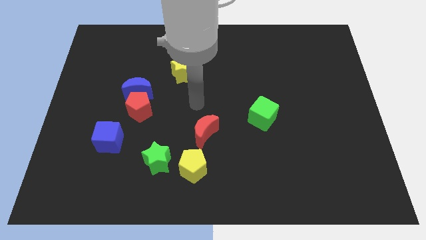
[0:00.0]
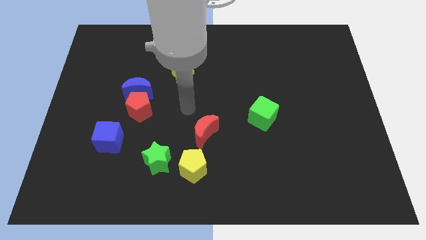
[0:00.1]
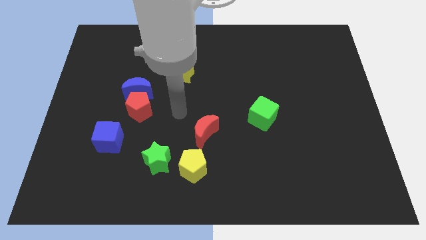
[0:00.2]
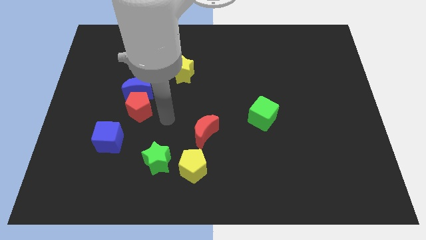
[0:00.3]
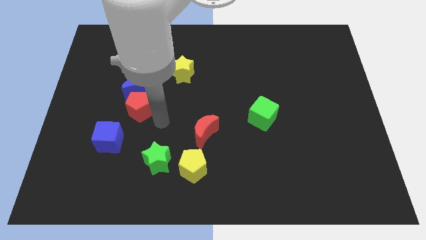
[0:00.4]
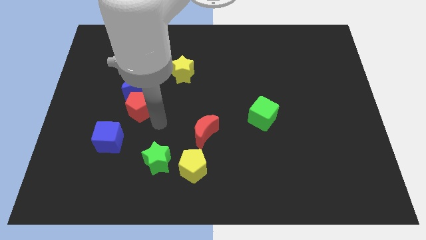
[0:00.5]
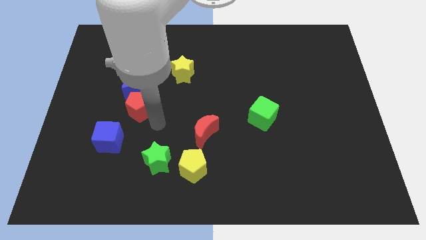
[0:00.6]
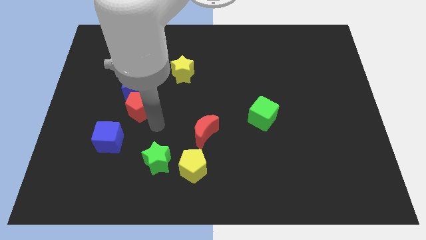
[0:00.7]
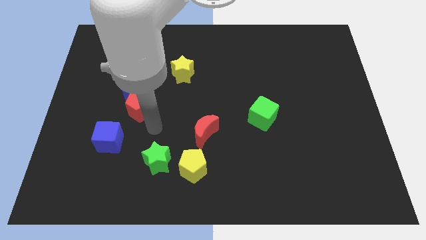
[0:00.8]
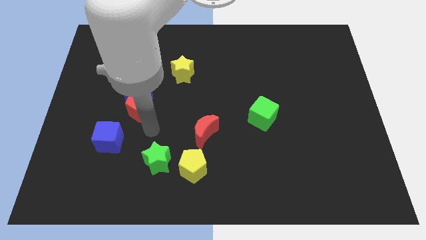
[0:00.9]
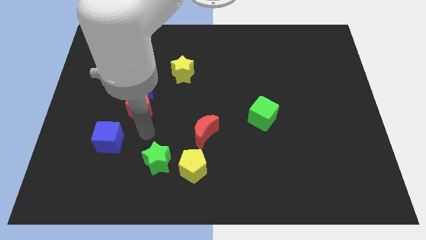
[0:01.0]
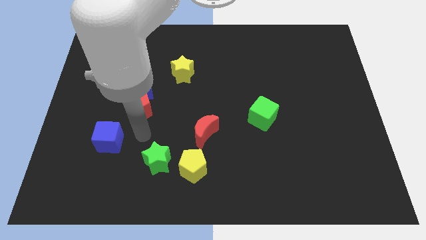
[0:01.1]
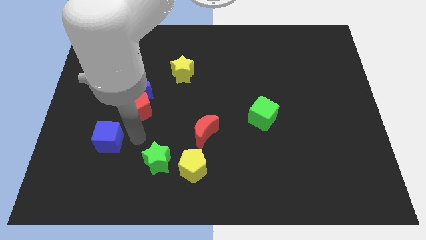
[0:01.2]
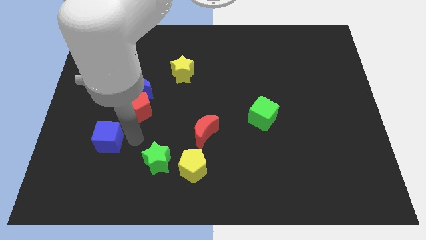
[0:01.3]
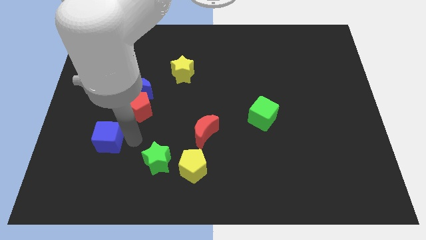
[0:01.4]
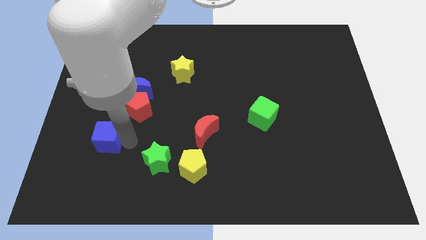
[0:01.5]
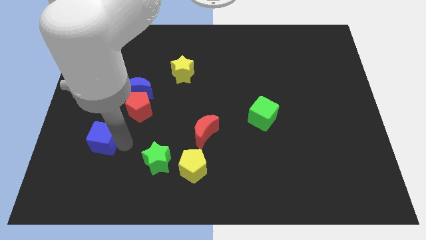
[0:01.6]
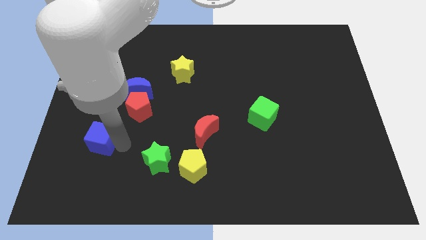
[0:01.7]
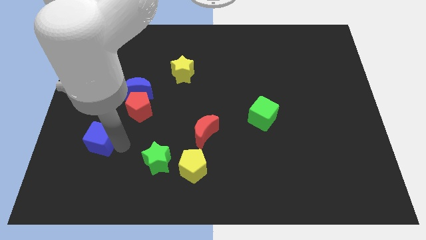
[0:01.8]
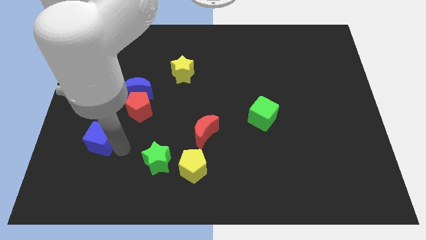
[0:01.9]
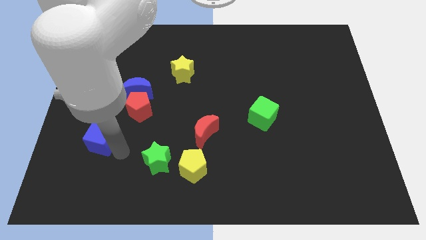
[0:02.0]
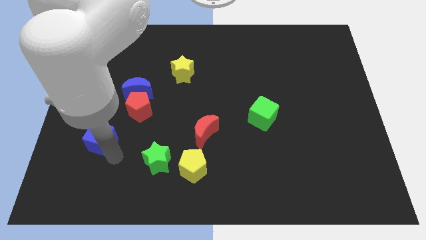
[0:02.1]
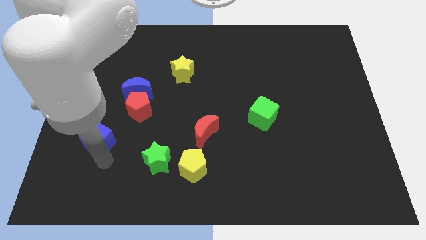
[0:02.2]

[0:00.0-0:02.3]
slightly touch blue cube

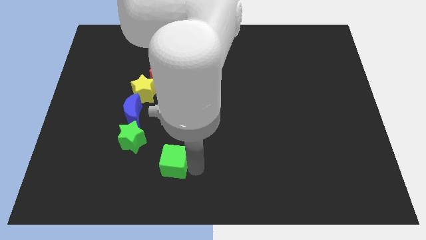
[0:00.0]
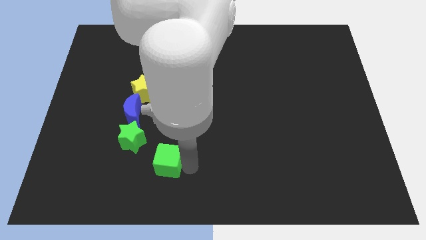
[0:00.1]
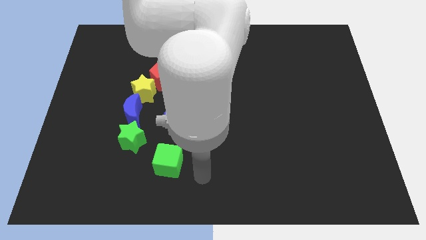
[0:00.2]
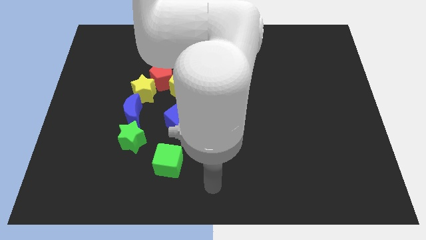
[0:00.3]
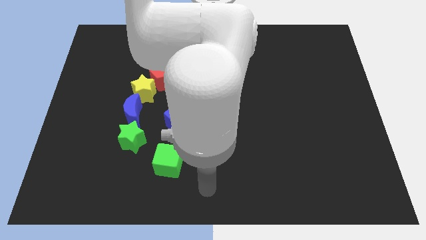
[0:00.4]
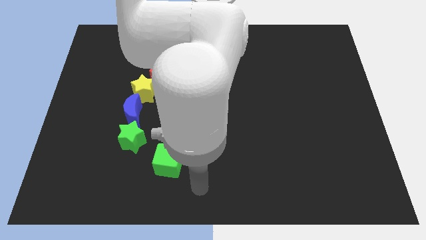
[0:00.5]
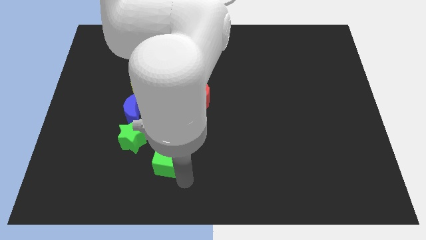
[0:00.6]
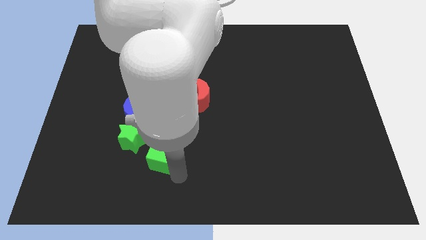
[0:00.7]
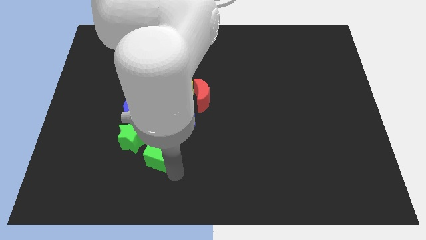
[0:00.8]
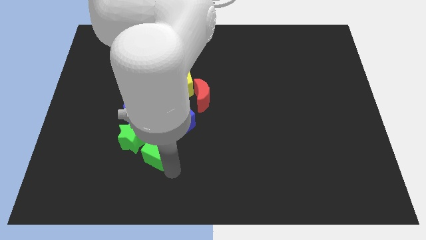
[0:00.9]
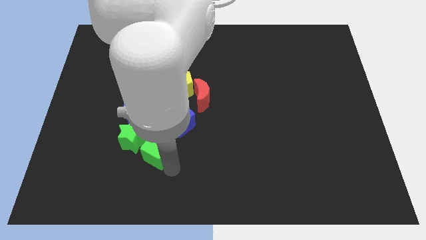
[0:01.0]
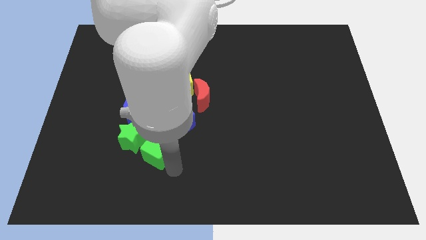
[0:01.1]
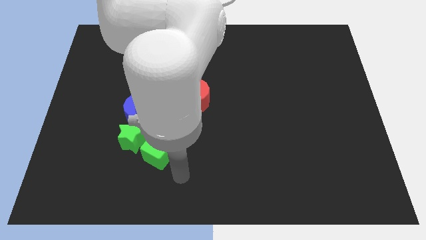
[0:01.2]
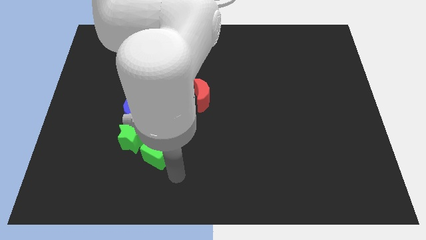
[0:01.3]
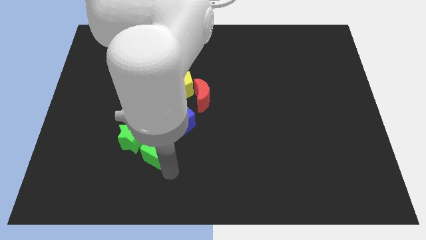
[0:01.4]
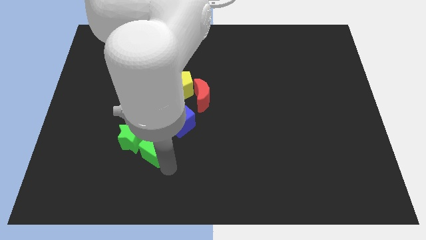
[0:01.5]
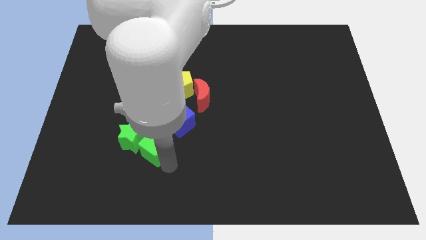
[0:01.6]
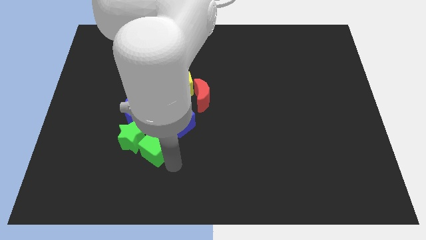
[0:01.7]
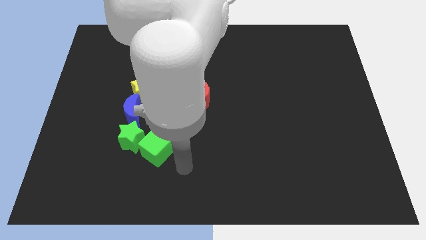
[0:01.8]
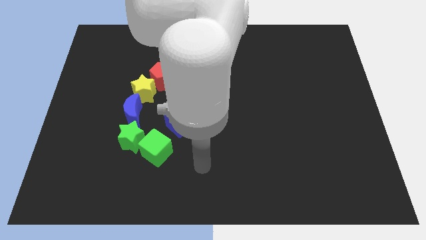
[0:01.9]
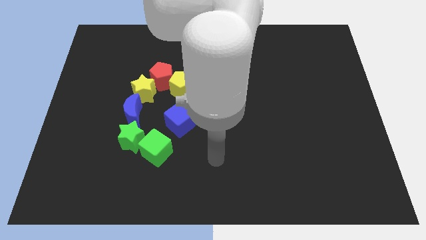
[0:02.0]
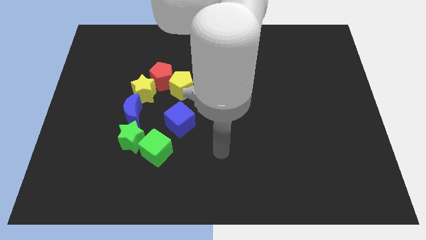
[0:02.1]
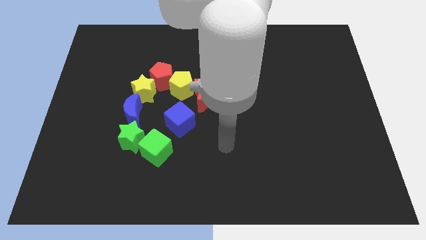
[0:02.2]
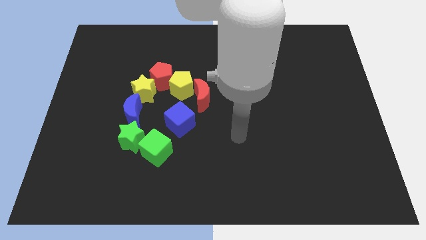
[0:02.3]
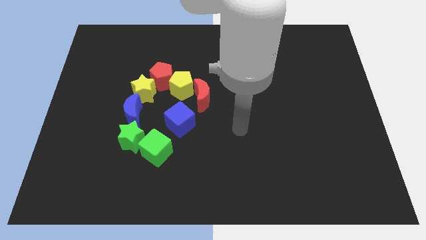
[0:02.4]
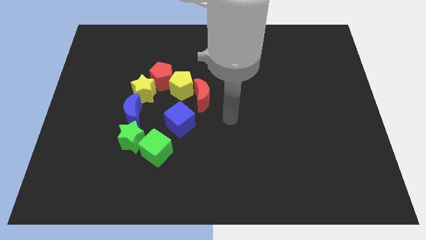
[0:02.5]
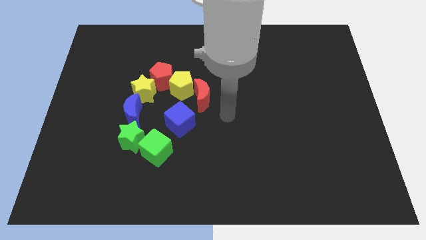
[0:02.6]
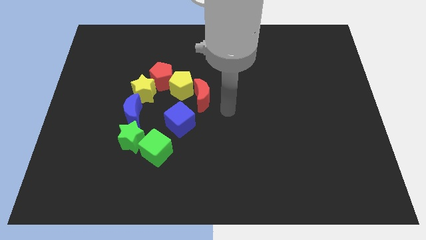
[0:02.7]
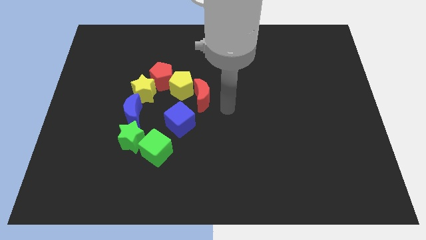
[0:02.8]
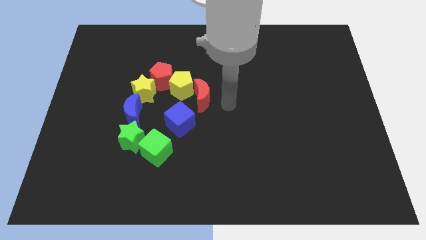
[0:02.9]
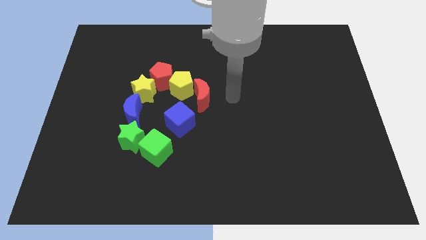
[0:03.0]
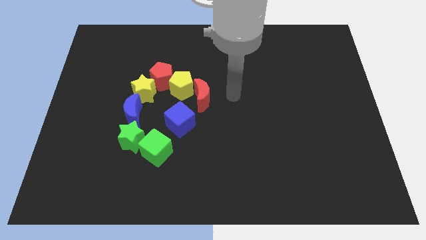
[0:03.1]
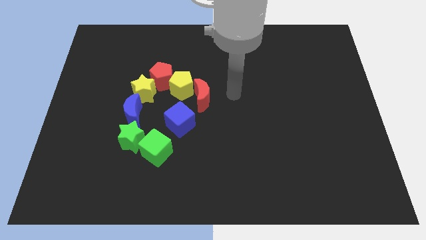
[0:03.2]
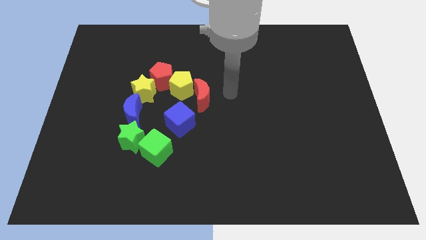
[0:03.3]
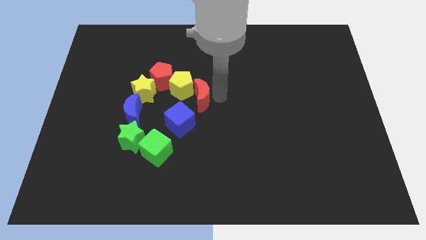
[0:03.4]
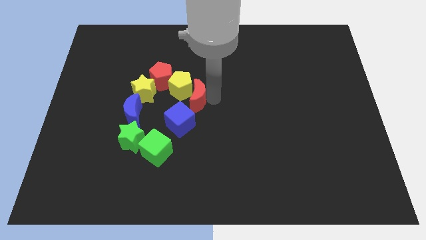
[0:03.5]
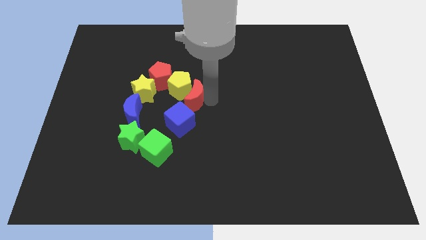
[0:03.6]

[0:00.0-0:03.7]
move the green cube close to the green star

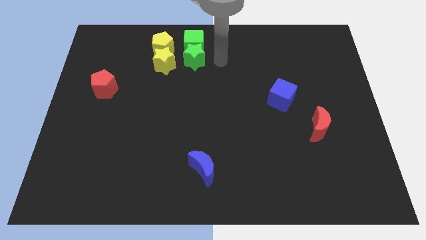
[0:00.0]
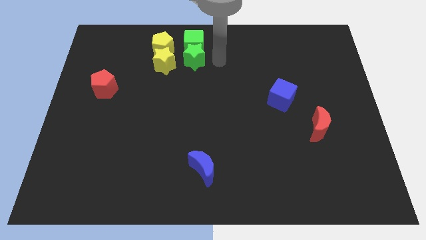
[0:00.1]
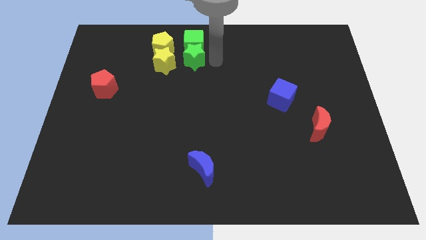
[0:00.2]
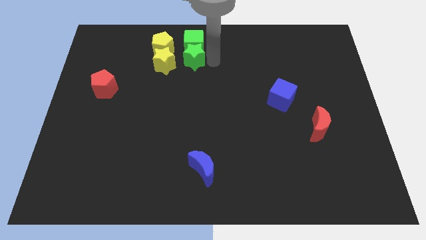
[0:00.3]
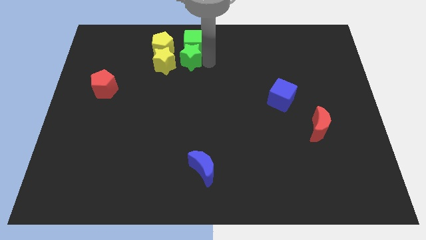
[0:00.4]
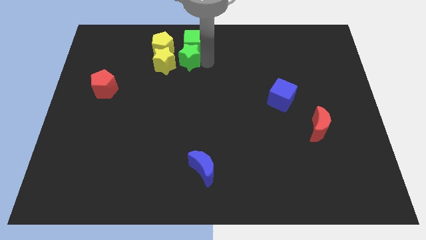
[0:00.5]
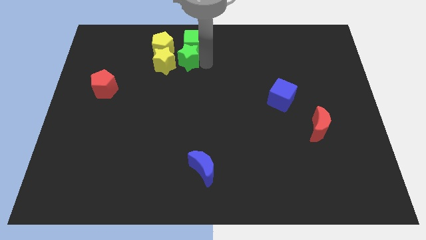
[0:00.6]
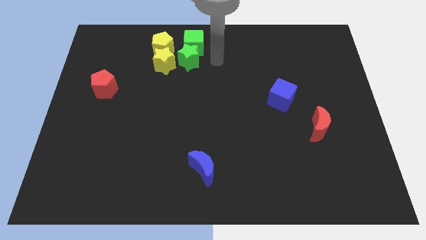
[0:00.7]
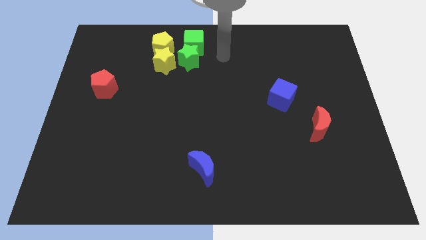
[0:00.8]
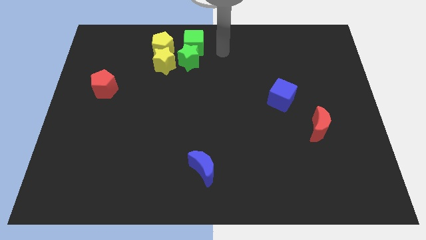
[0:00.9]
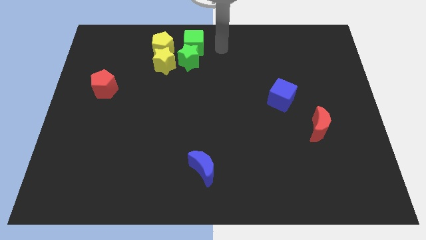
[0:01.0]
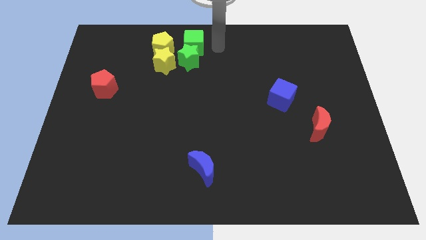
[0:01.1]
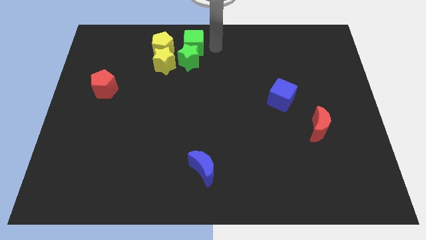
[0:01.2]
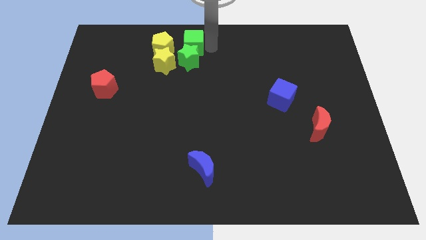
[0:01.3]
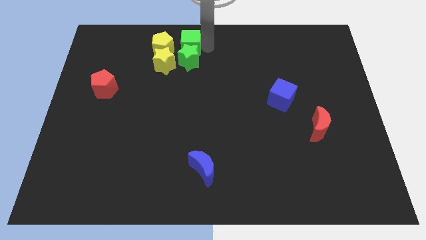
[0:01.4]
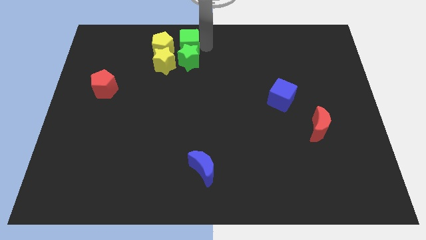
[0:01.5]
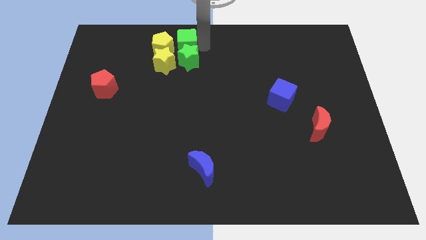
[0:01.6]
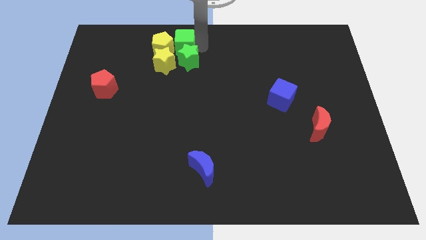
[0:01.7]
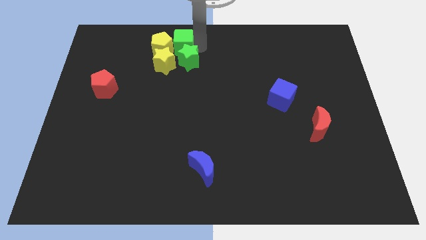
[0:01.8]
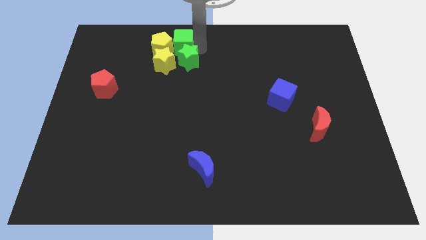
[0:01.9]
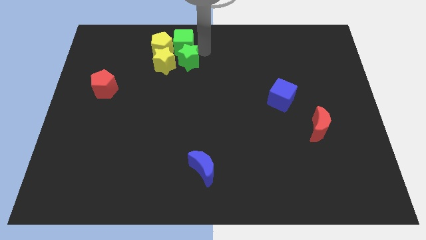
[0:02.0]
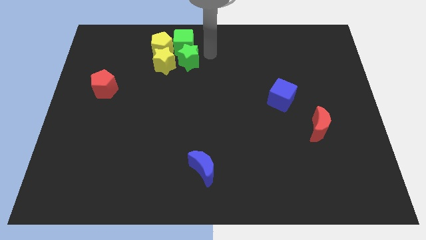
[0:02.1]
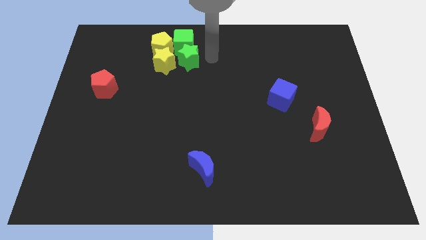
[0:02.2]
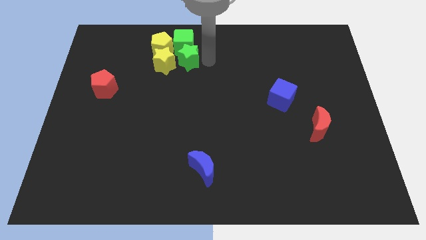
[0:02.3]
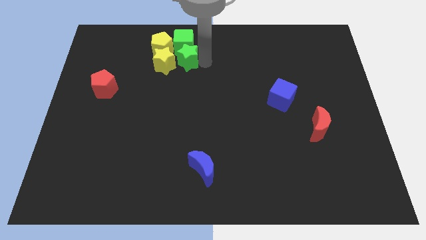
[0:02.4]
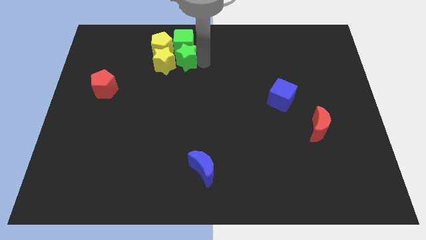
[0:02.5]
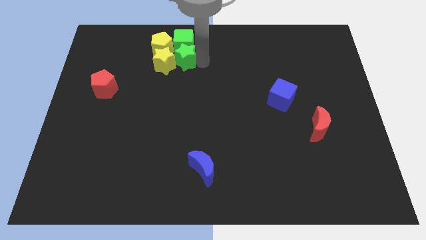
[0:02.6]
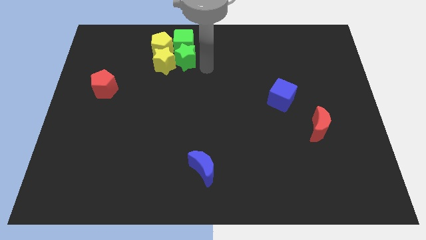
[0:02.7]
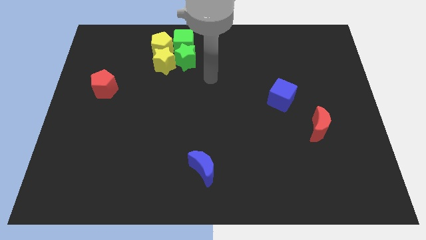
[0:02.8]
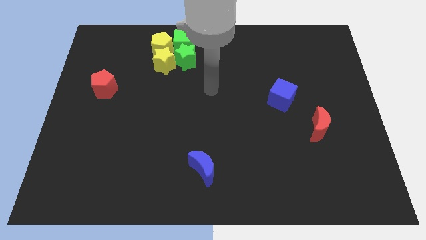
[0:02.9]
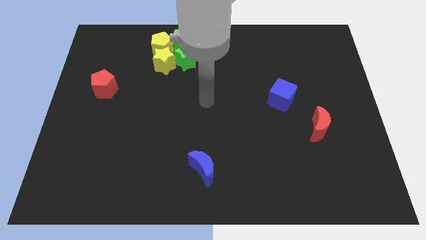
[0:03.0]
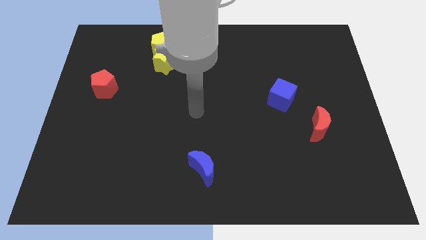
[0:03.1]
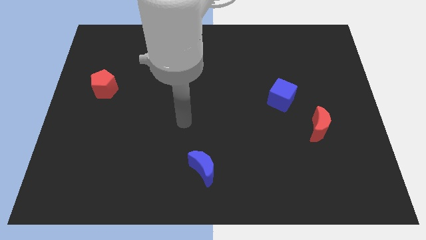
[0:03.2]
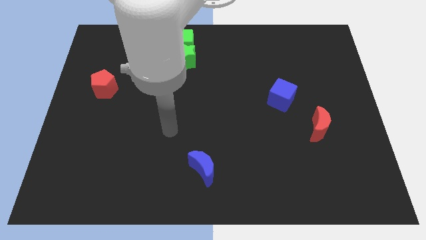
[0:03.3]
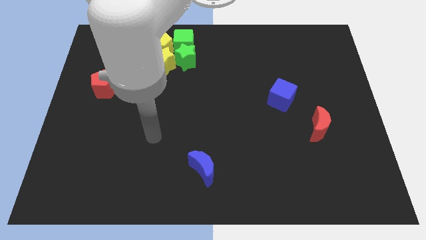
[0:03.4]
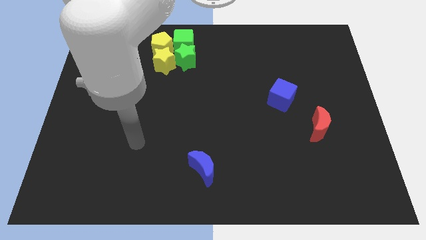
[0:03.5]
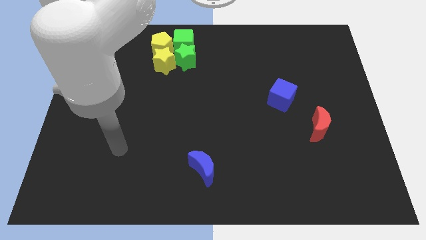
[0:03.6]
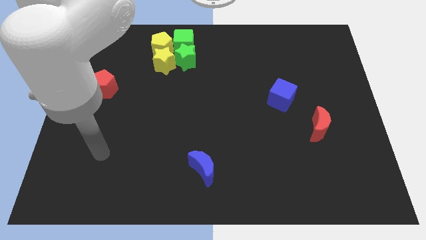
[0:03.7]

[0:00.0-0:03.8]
move green blocks close to yellow blocks
